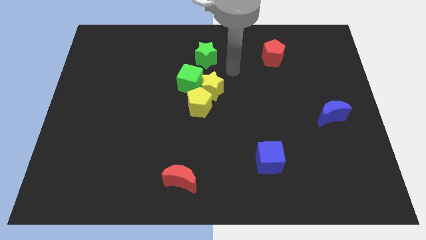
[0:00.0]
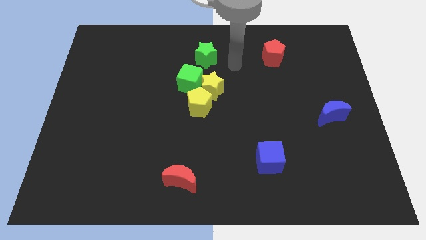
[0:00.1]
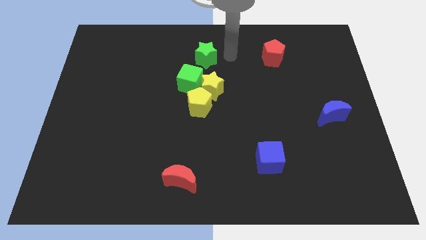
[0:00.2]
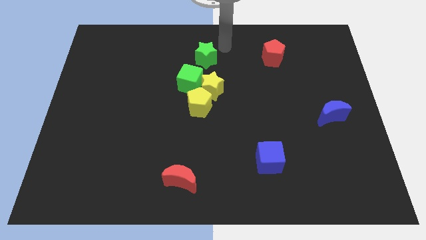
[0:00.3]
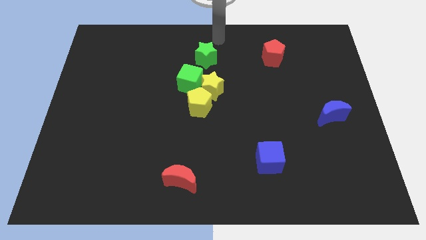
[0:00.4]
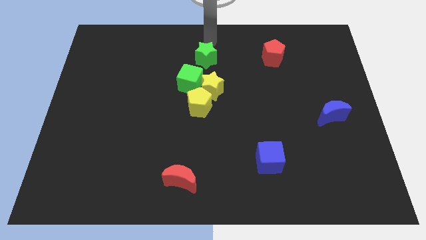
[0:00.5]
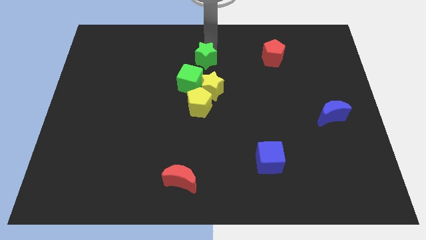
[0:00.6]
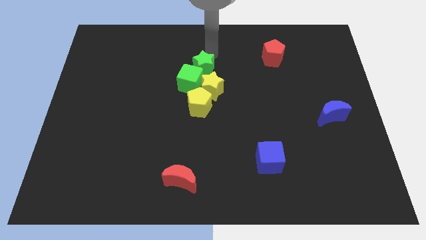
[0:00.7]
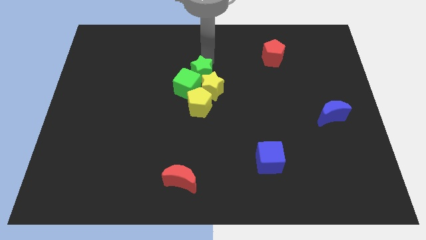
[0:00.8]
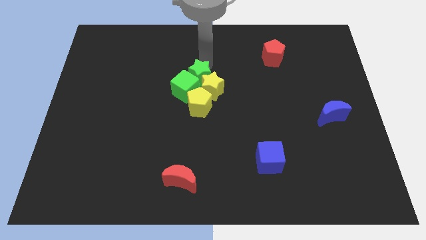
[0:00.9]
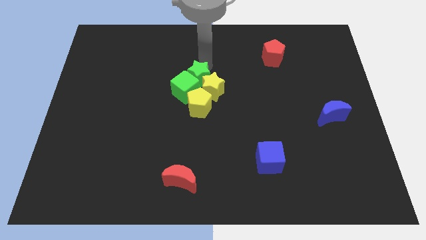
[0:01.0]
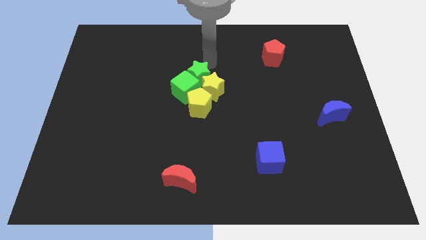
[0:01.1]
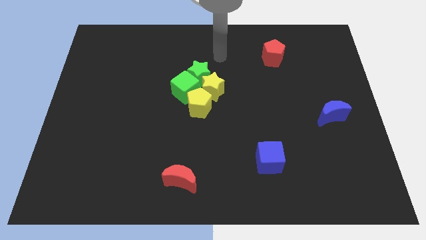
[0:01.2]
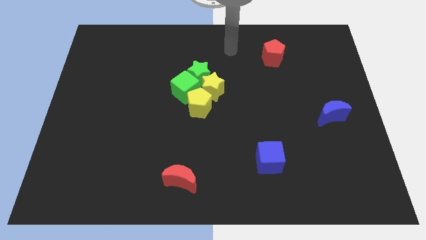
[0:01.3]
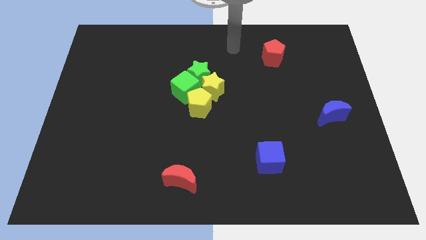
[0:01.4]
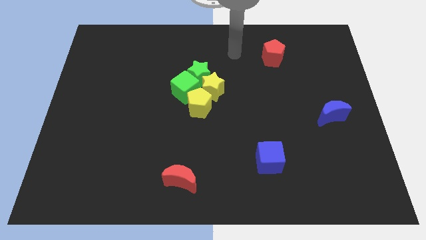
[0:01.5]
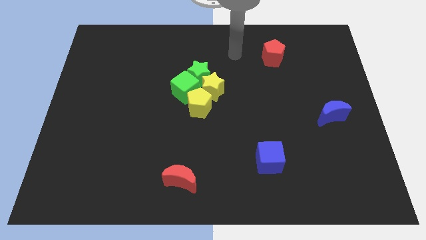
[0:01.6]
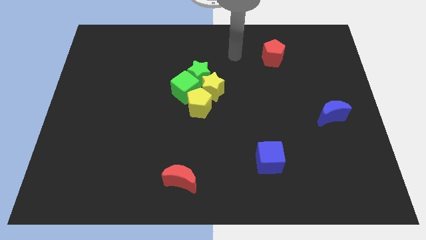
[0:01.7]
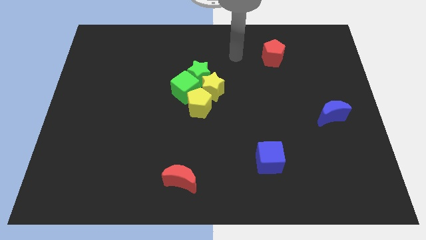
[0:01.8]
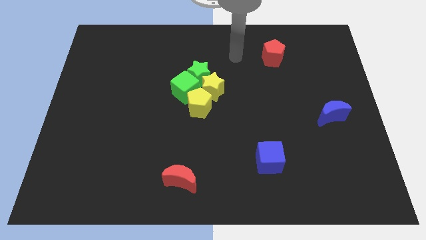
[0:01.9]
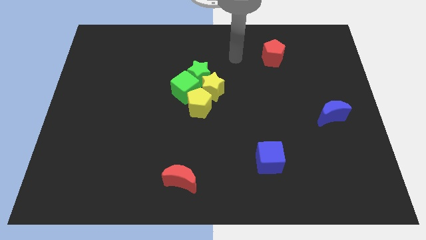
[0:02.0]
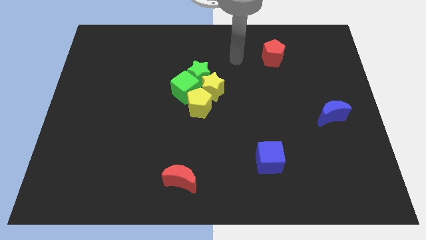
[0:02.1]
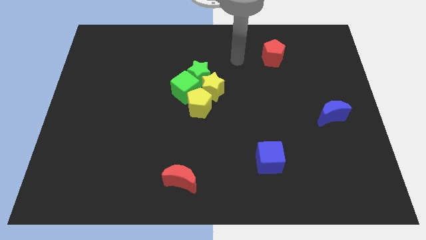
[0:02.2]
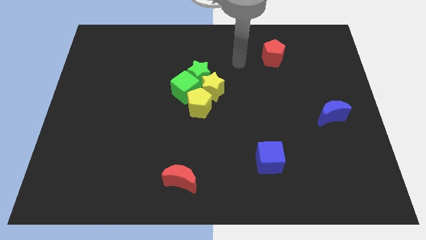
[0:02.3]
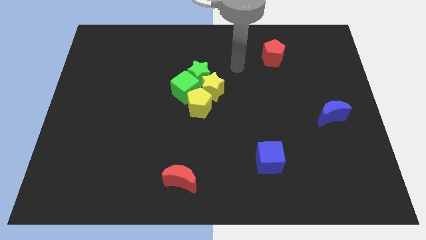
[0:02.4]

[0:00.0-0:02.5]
put the green star into the group of yellow and green blocks

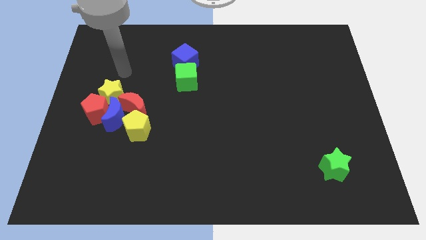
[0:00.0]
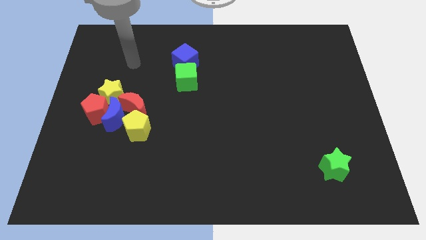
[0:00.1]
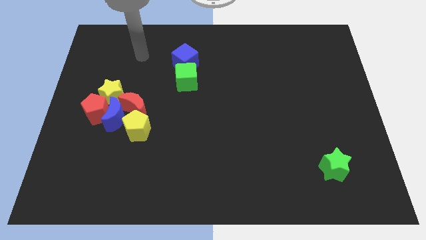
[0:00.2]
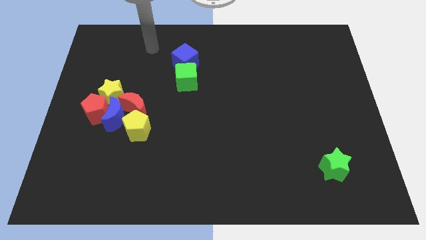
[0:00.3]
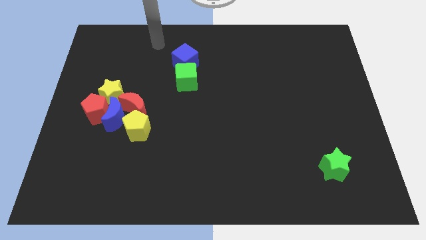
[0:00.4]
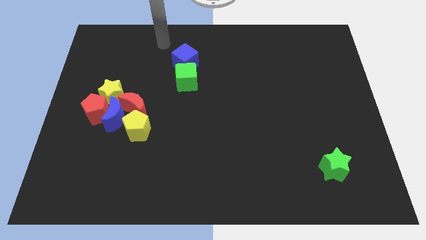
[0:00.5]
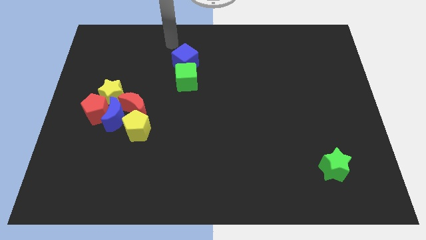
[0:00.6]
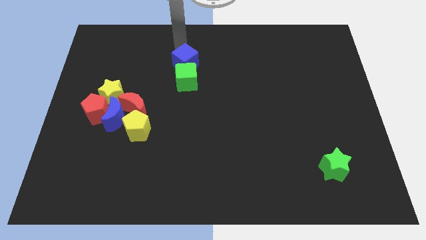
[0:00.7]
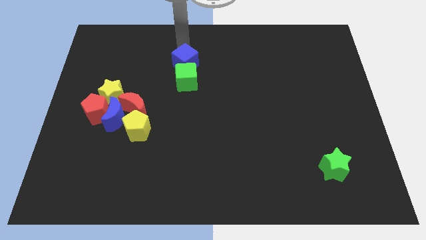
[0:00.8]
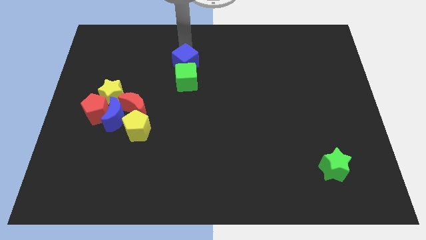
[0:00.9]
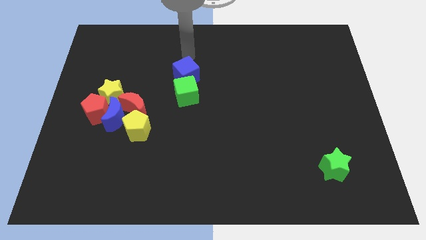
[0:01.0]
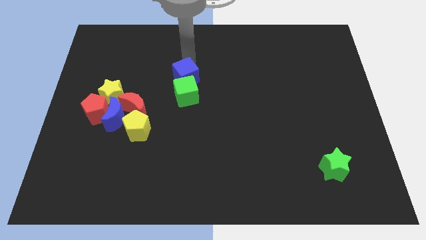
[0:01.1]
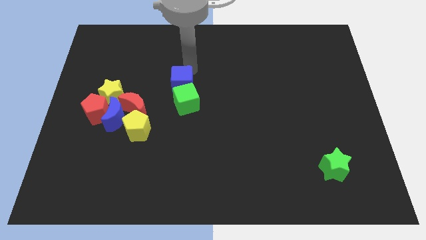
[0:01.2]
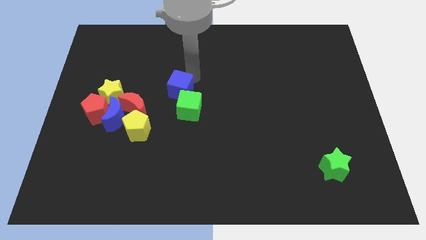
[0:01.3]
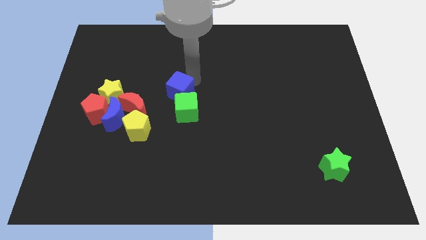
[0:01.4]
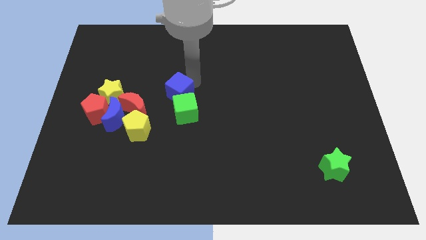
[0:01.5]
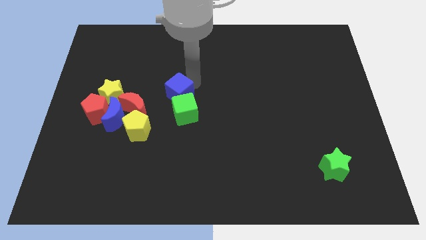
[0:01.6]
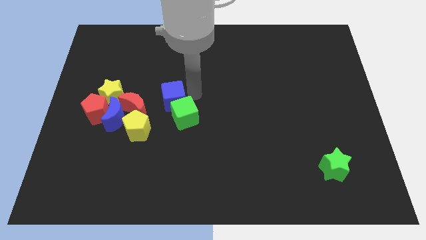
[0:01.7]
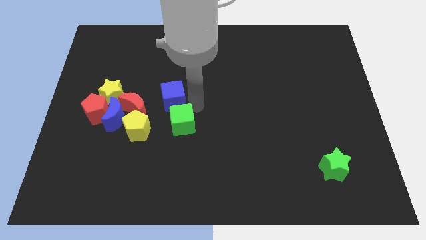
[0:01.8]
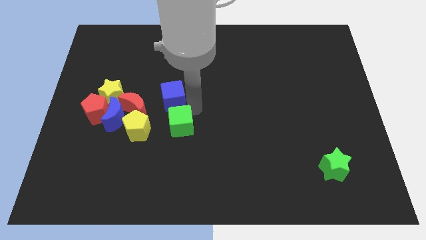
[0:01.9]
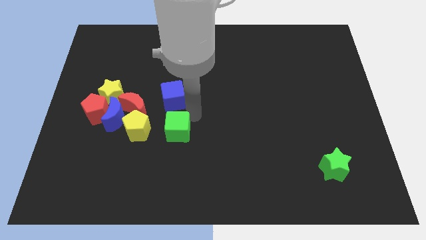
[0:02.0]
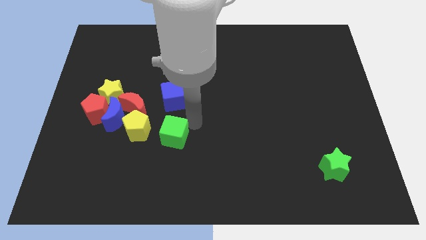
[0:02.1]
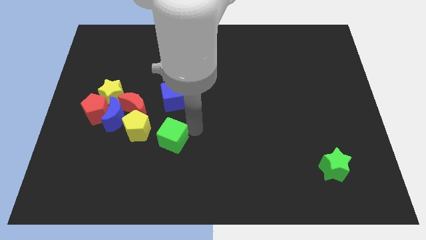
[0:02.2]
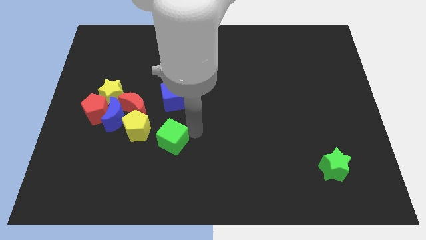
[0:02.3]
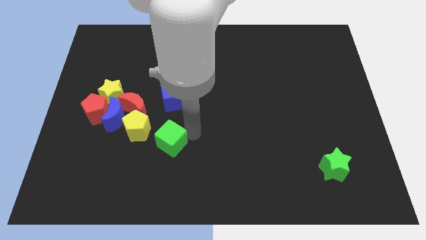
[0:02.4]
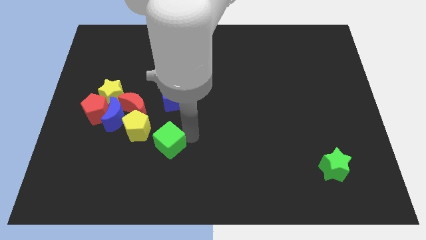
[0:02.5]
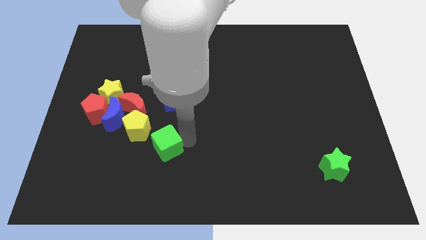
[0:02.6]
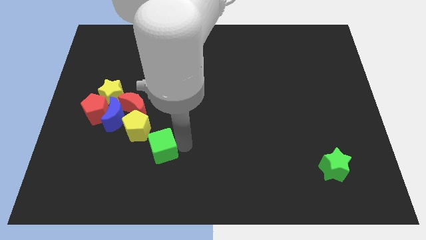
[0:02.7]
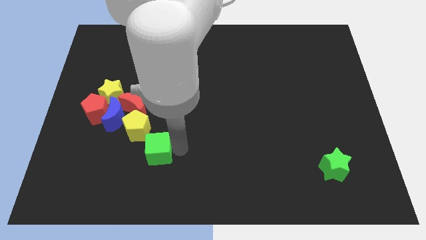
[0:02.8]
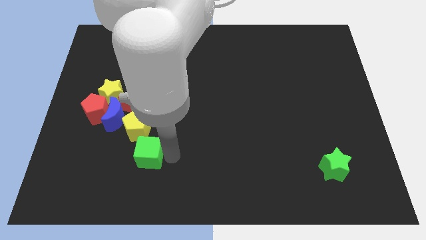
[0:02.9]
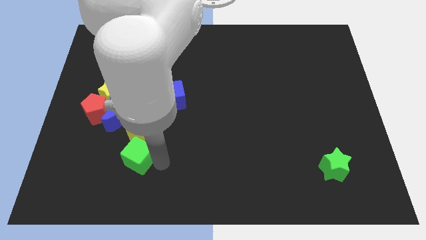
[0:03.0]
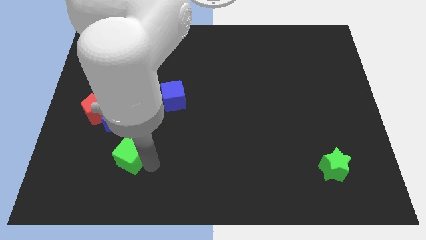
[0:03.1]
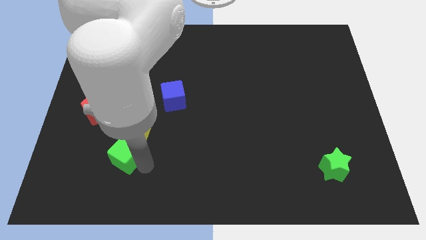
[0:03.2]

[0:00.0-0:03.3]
separarte the green cube from the bottom side of the blue cube

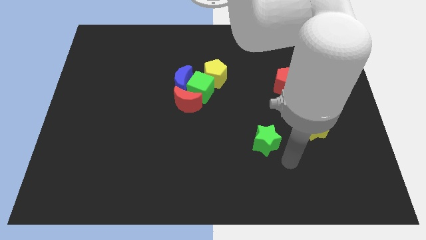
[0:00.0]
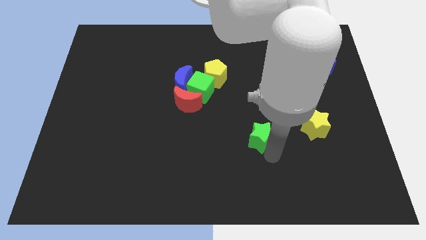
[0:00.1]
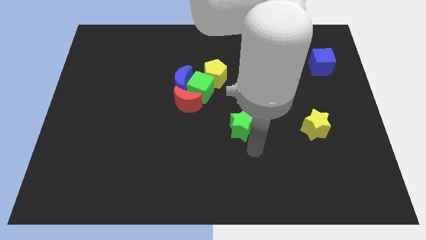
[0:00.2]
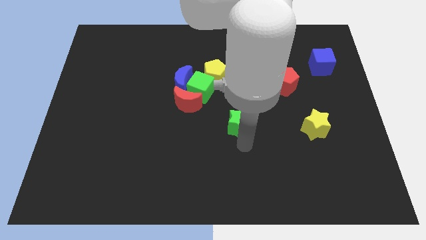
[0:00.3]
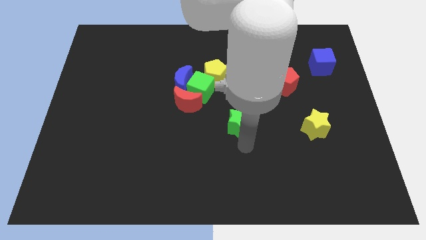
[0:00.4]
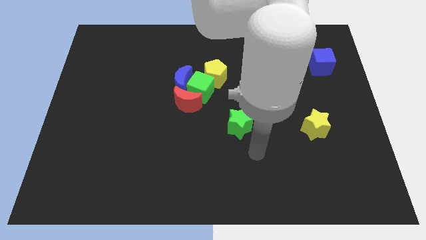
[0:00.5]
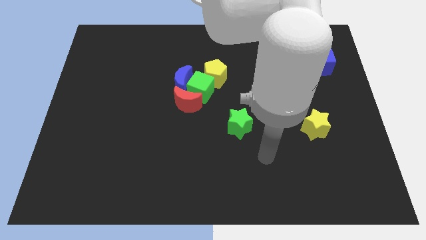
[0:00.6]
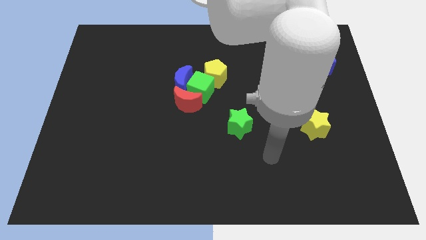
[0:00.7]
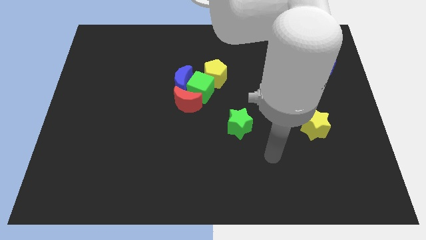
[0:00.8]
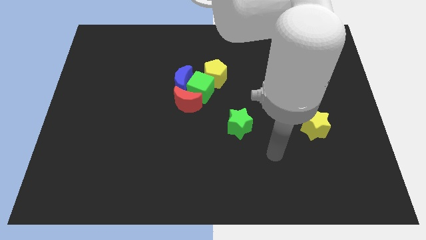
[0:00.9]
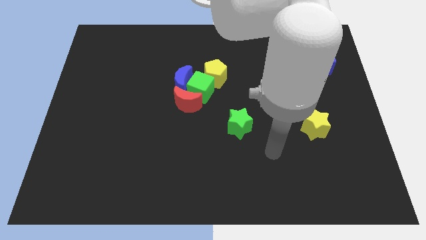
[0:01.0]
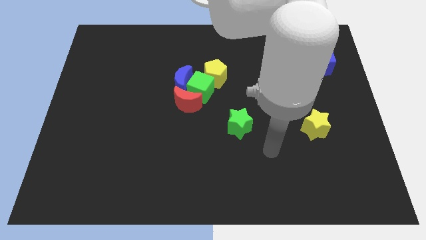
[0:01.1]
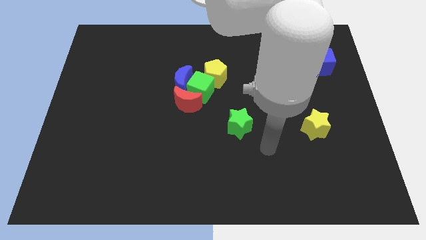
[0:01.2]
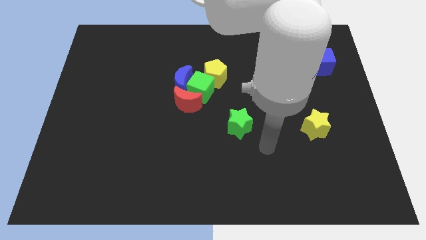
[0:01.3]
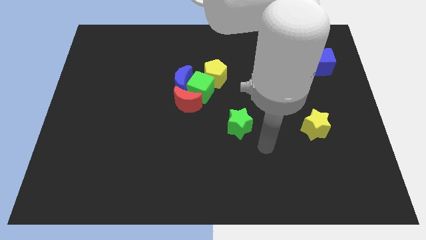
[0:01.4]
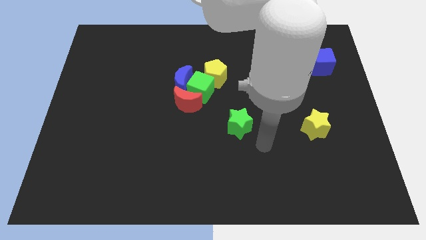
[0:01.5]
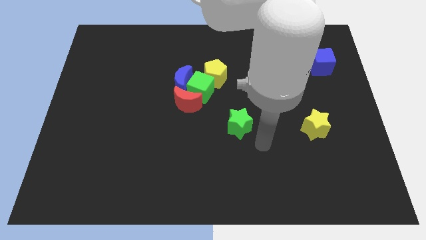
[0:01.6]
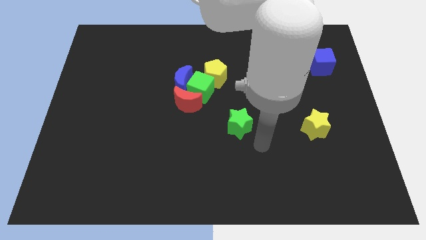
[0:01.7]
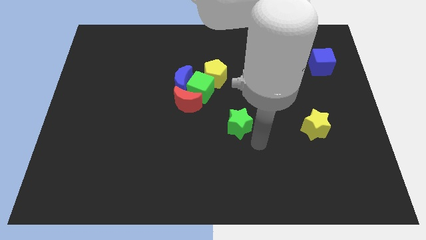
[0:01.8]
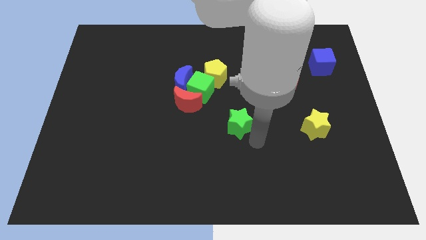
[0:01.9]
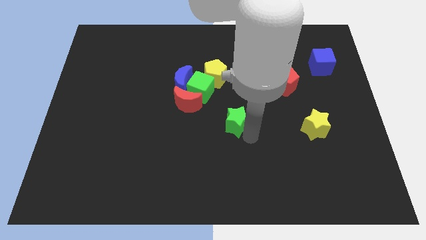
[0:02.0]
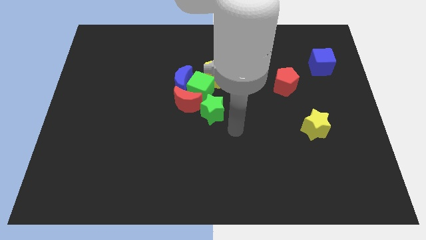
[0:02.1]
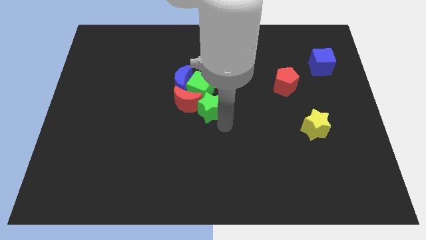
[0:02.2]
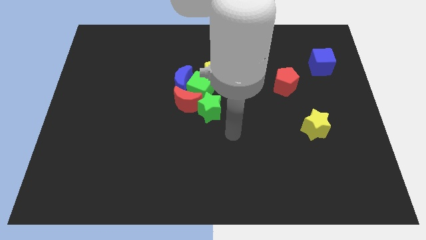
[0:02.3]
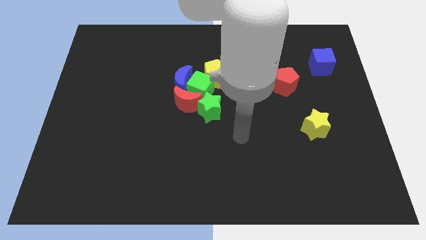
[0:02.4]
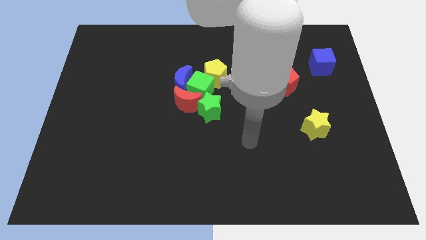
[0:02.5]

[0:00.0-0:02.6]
place the green star closer to the red moon

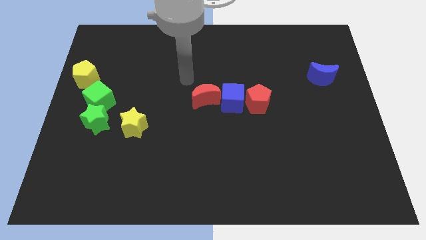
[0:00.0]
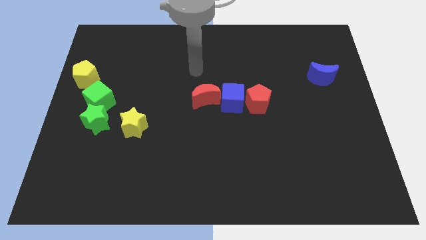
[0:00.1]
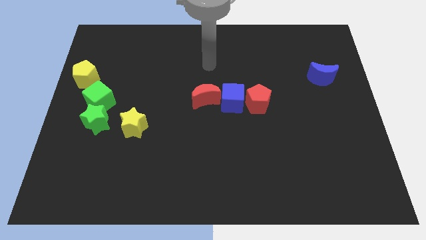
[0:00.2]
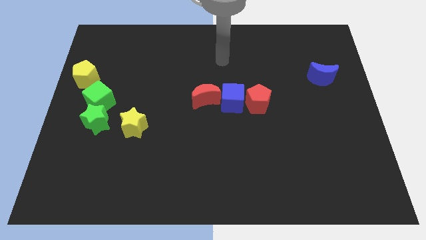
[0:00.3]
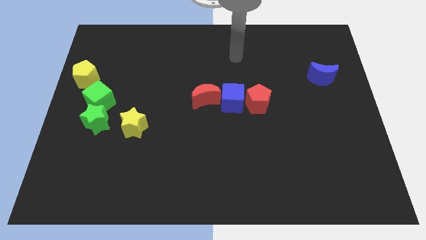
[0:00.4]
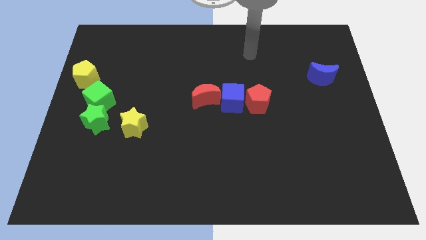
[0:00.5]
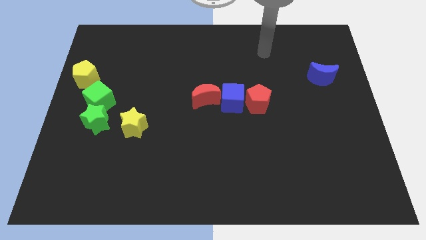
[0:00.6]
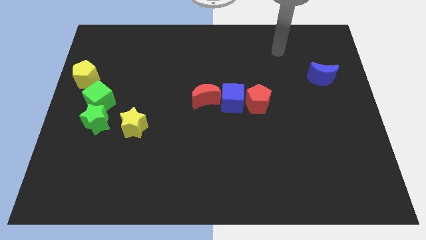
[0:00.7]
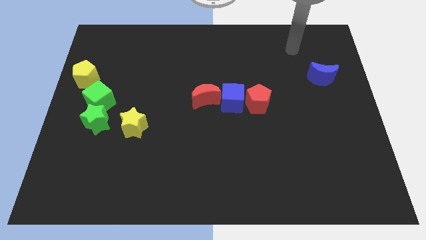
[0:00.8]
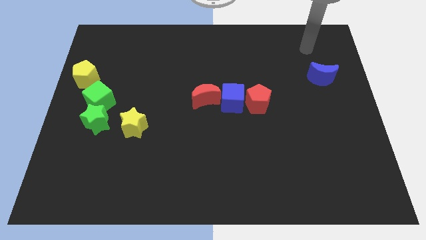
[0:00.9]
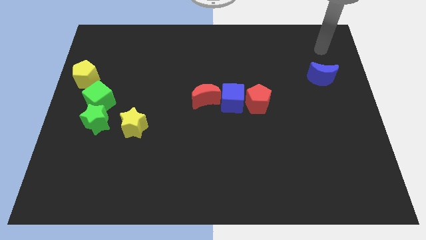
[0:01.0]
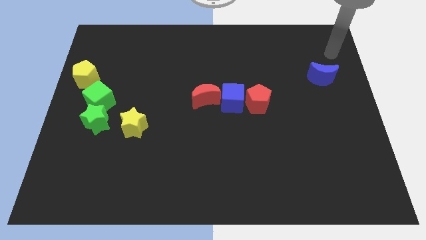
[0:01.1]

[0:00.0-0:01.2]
point your arm at the top of the blue crescent
